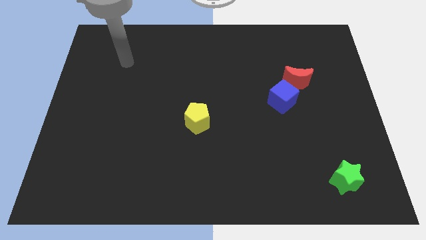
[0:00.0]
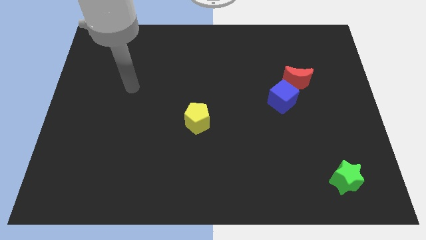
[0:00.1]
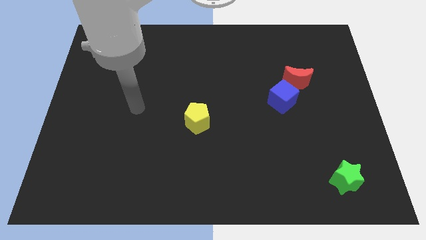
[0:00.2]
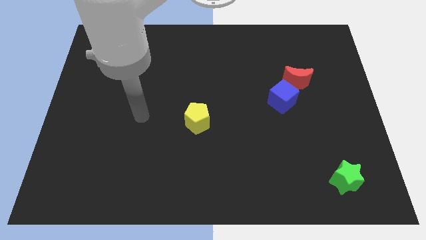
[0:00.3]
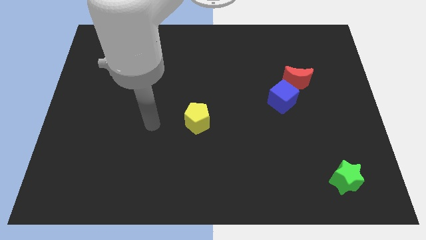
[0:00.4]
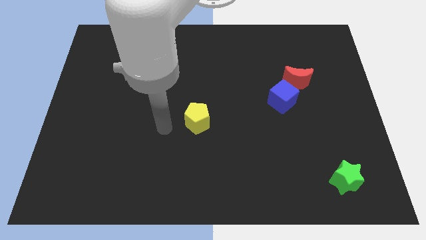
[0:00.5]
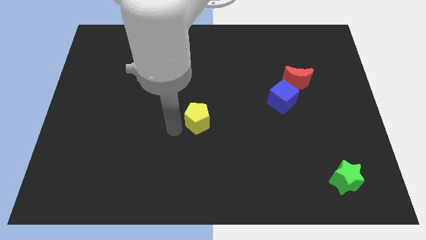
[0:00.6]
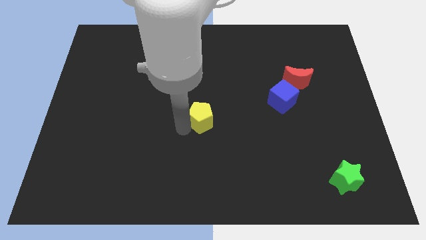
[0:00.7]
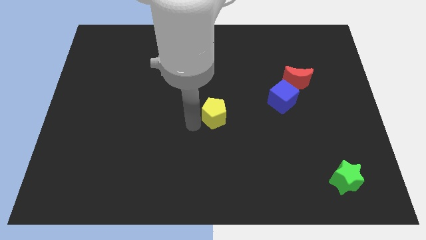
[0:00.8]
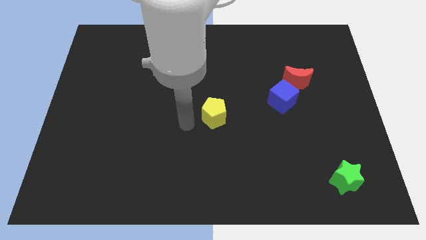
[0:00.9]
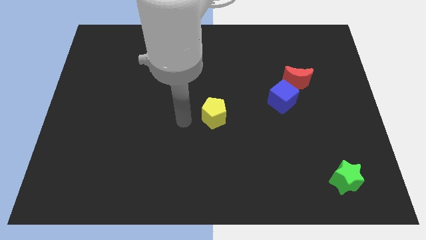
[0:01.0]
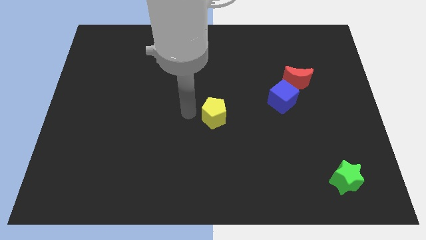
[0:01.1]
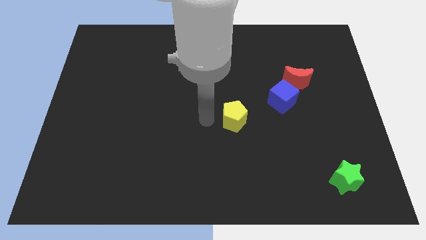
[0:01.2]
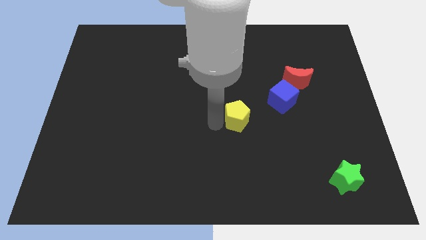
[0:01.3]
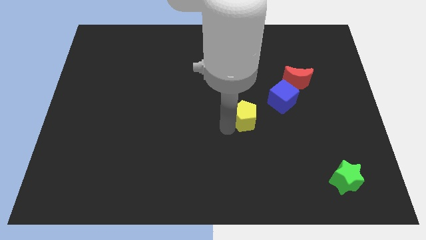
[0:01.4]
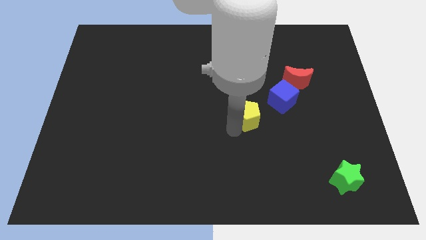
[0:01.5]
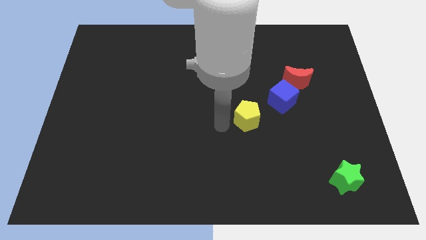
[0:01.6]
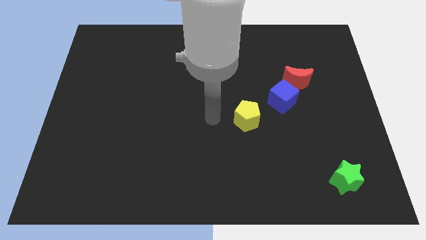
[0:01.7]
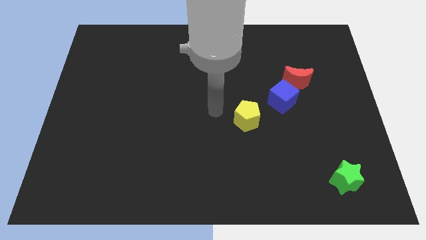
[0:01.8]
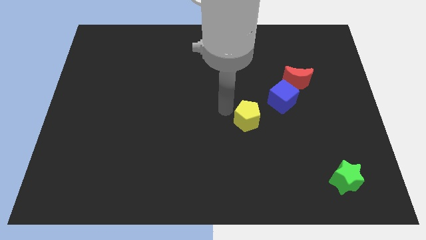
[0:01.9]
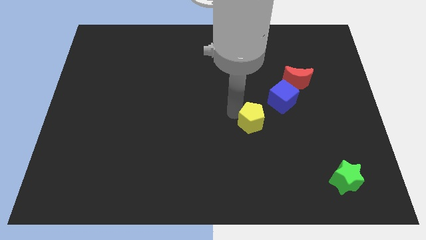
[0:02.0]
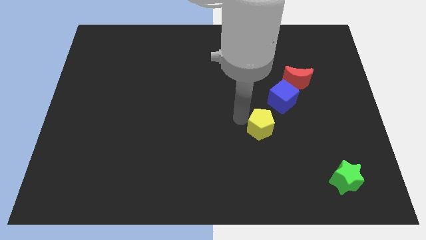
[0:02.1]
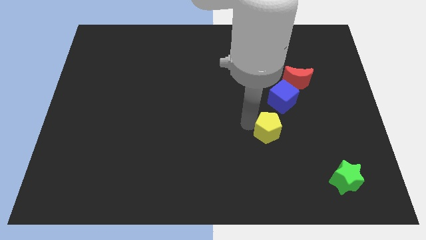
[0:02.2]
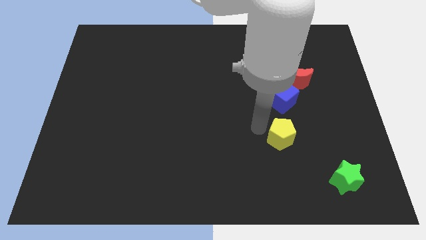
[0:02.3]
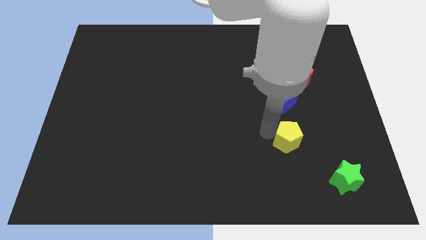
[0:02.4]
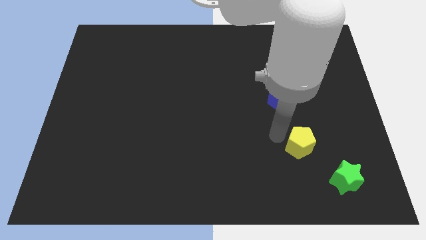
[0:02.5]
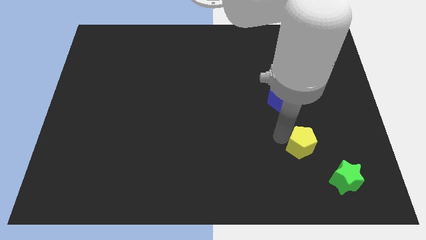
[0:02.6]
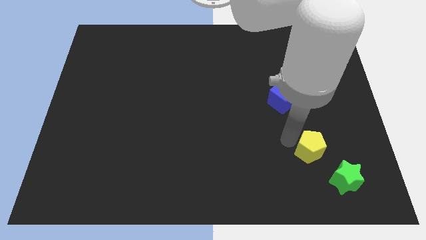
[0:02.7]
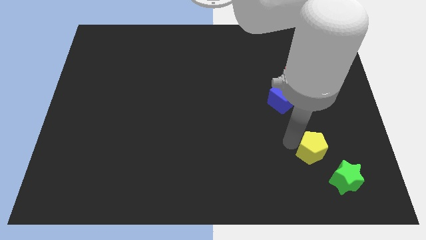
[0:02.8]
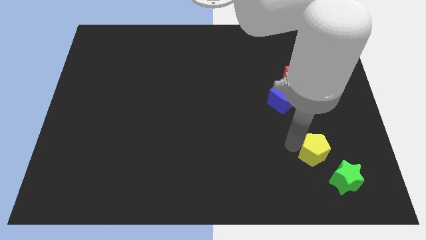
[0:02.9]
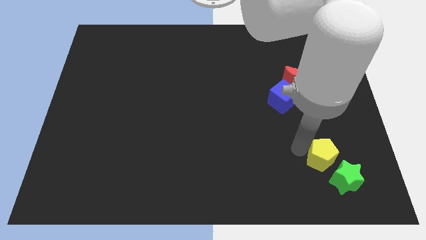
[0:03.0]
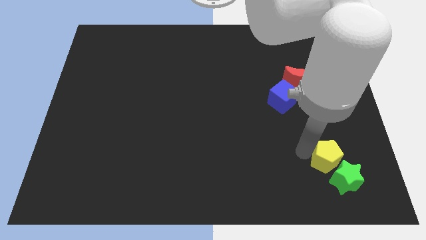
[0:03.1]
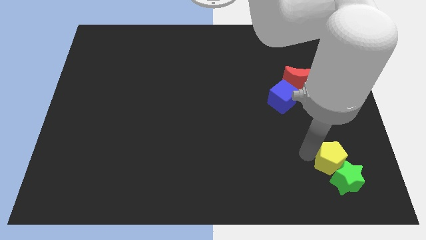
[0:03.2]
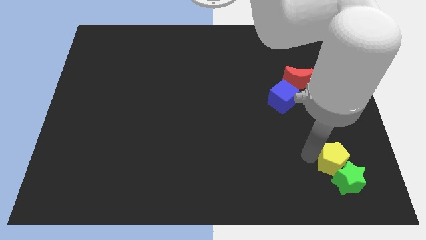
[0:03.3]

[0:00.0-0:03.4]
slide the yellow pentagon next to the green star

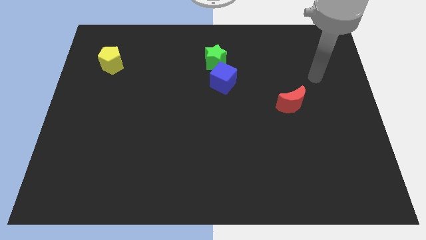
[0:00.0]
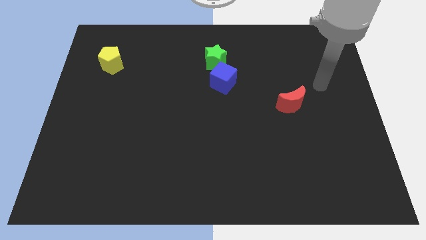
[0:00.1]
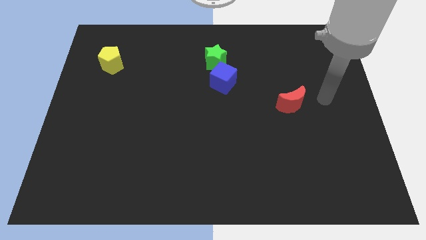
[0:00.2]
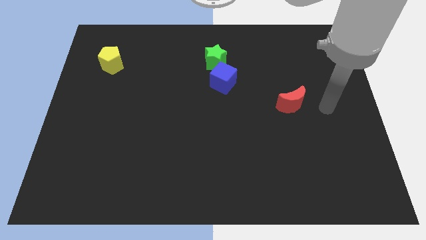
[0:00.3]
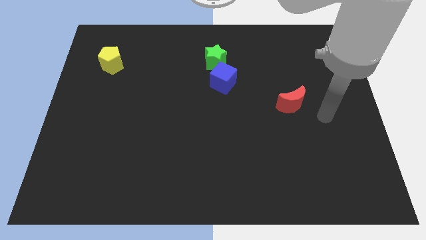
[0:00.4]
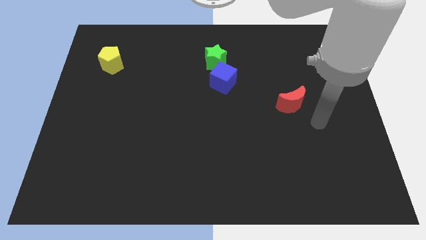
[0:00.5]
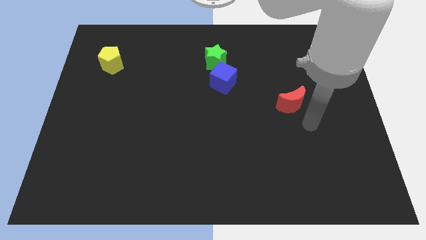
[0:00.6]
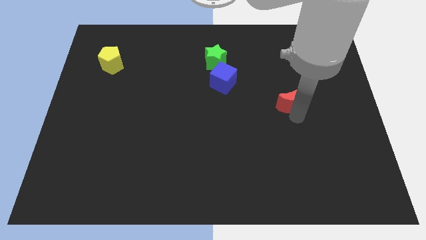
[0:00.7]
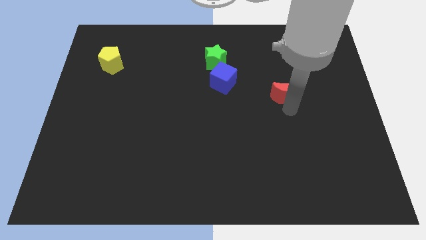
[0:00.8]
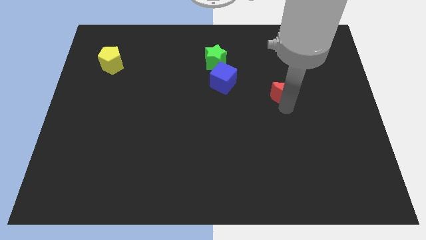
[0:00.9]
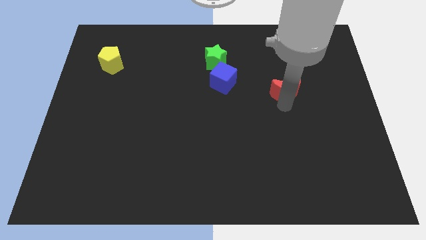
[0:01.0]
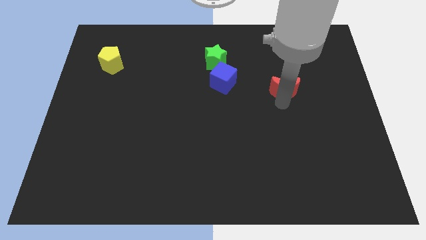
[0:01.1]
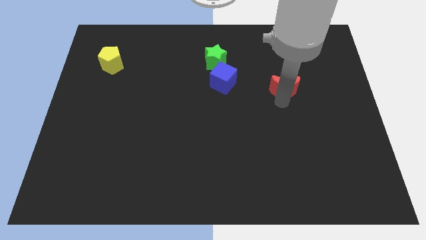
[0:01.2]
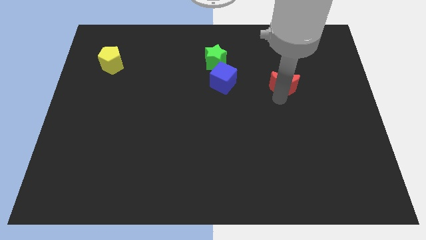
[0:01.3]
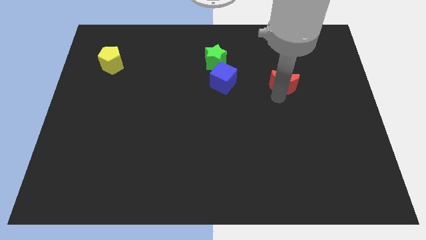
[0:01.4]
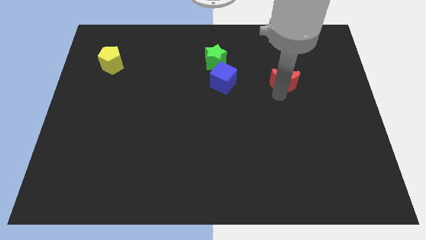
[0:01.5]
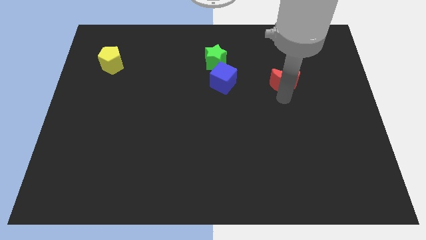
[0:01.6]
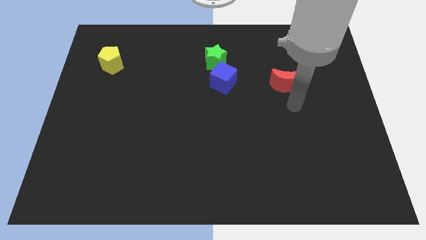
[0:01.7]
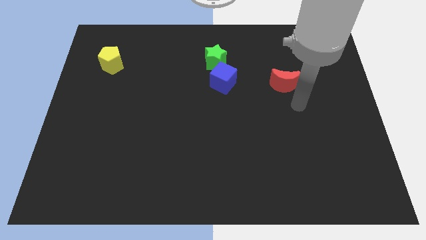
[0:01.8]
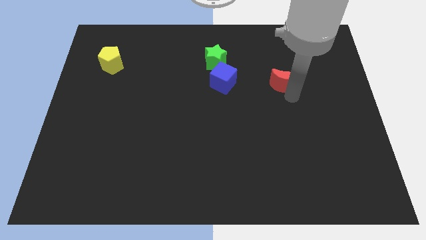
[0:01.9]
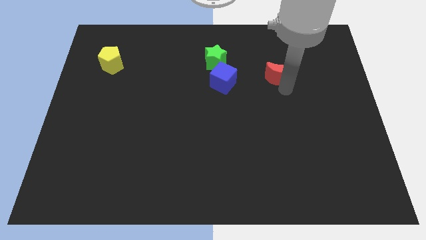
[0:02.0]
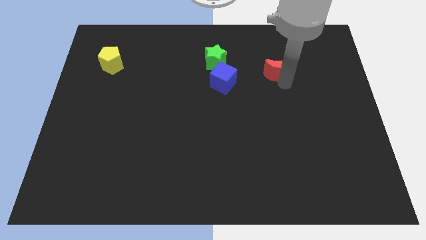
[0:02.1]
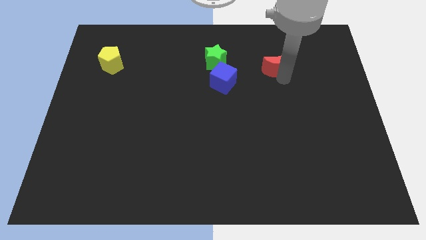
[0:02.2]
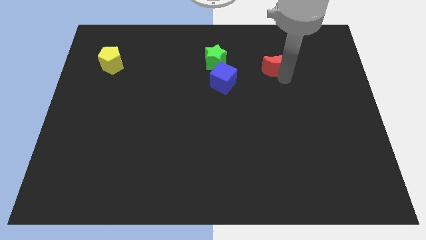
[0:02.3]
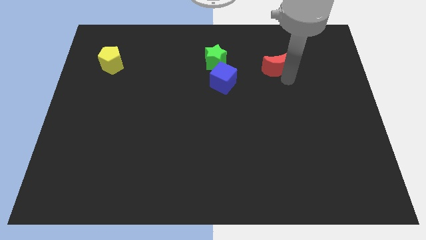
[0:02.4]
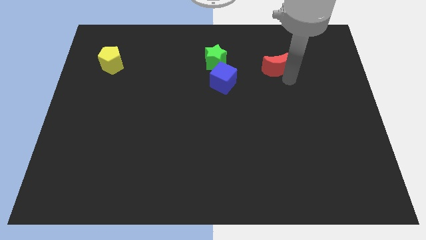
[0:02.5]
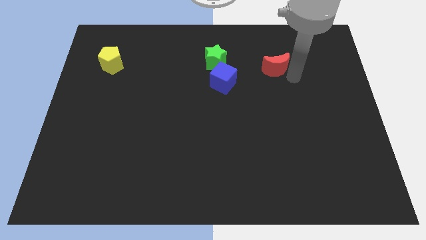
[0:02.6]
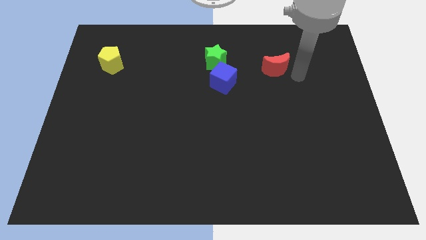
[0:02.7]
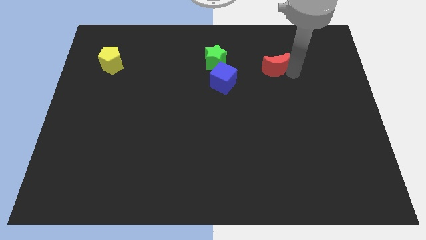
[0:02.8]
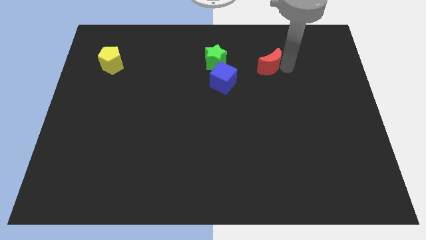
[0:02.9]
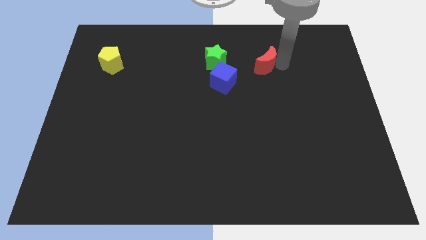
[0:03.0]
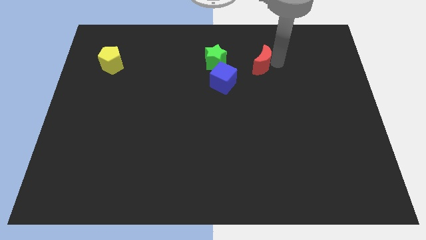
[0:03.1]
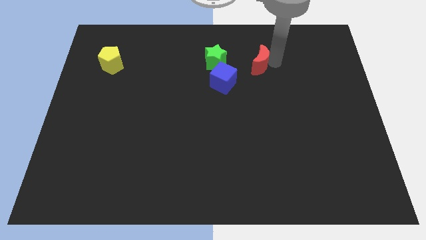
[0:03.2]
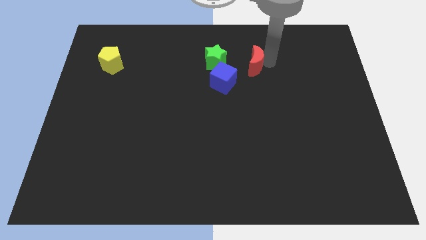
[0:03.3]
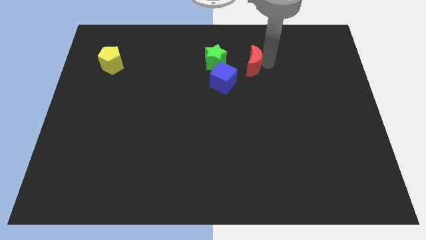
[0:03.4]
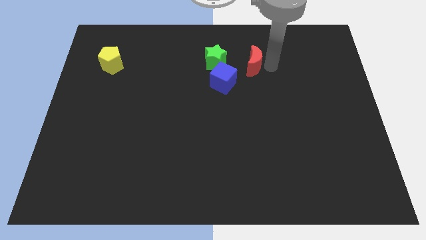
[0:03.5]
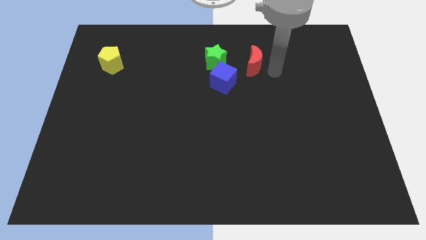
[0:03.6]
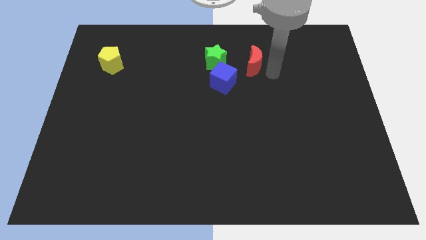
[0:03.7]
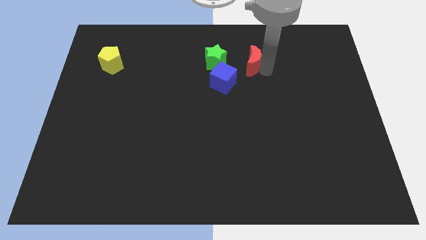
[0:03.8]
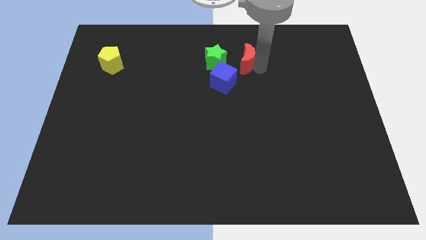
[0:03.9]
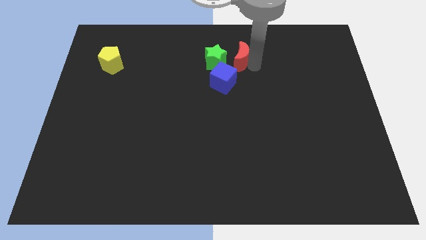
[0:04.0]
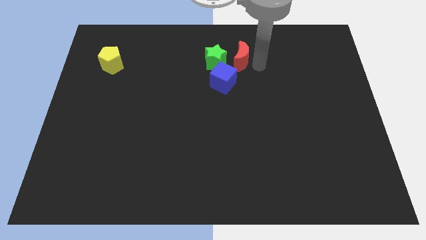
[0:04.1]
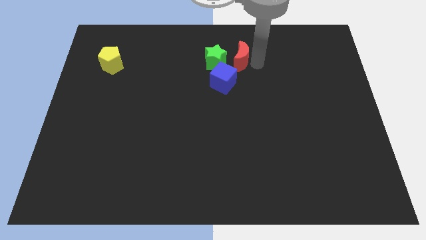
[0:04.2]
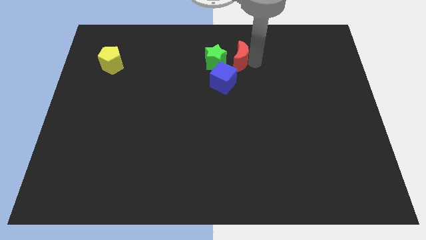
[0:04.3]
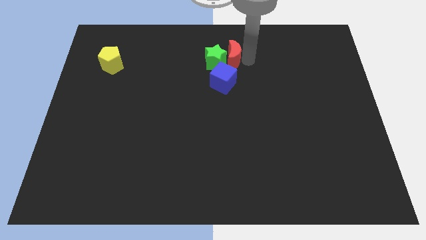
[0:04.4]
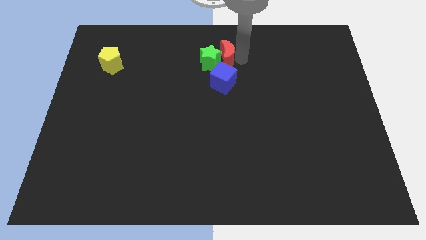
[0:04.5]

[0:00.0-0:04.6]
push the red block close to the star

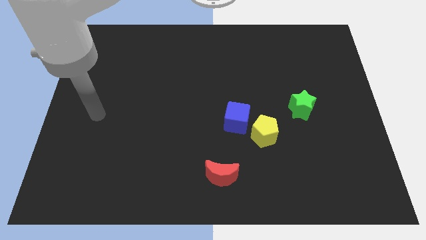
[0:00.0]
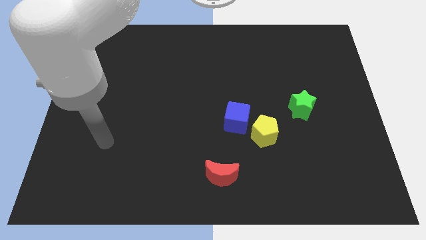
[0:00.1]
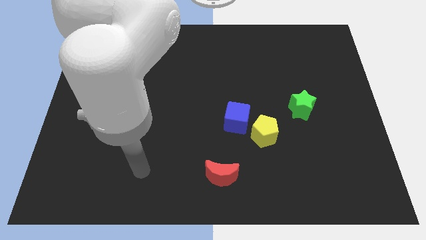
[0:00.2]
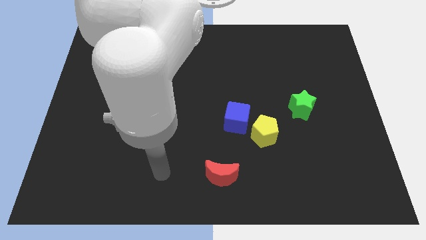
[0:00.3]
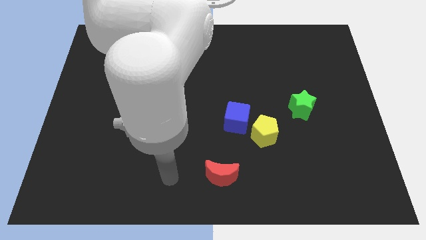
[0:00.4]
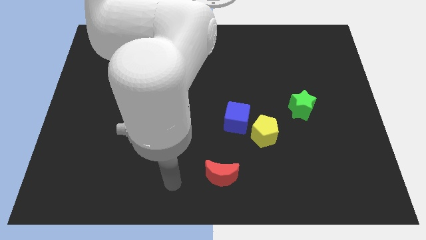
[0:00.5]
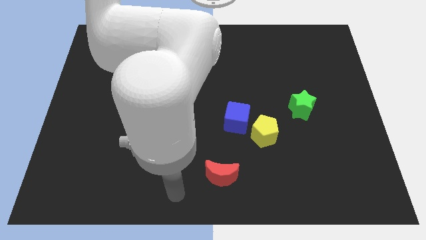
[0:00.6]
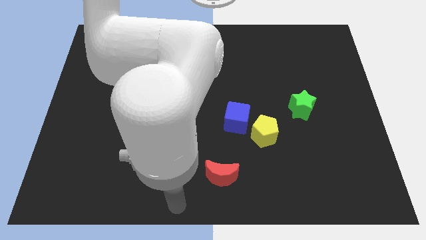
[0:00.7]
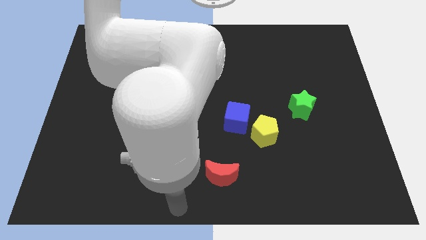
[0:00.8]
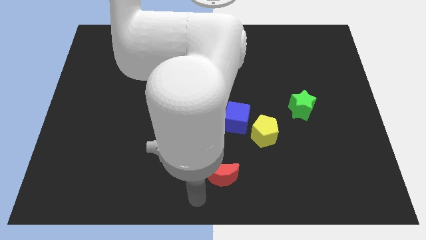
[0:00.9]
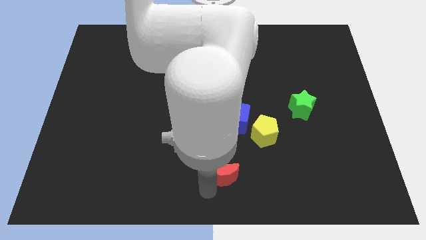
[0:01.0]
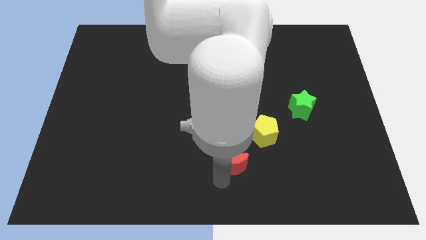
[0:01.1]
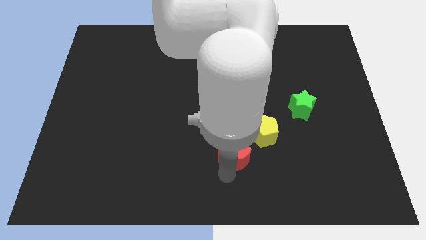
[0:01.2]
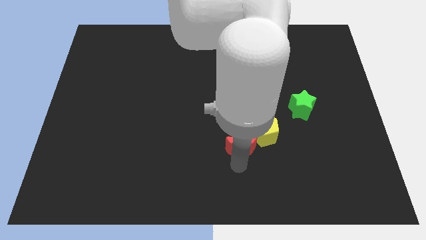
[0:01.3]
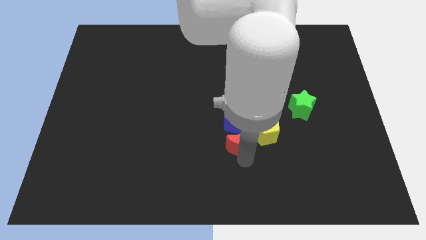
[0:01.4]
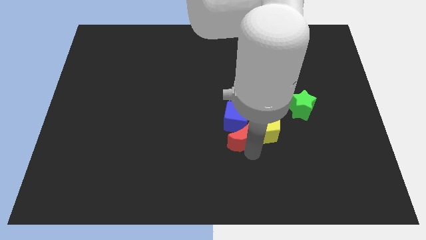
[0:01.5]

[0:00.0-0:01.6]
slide the red block to the pentagon
